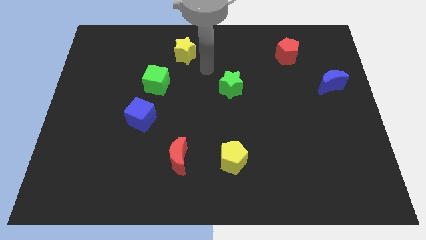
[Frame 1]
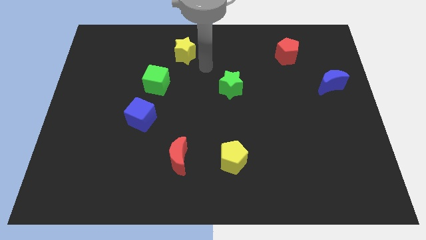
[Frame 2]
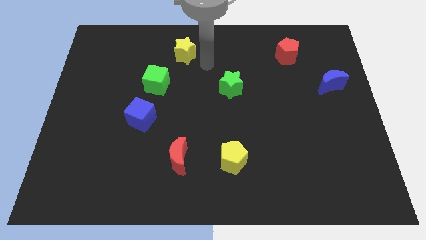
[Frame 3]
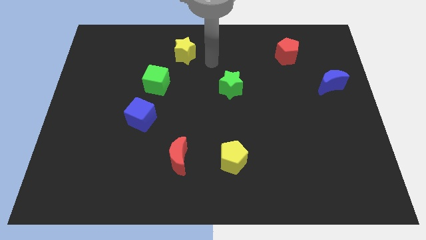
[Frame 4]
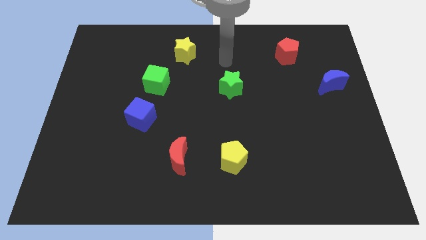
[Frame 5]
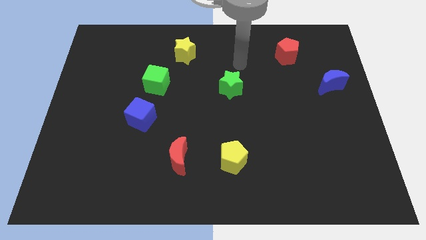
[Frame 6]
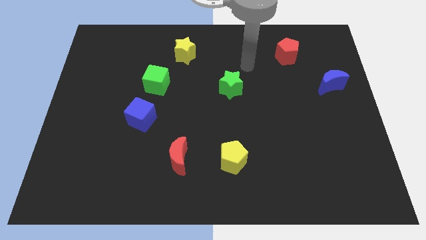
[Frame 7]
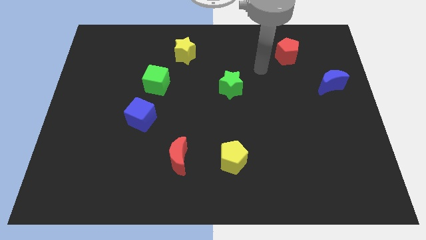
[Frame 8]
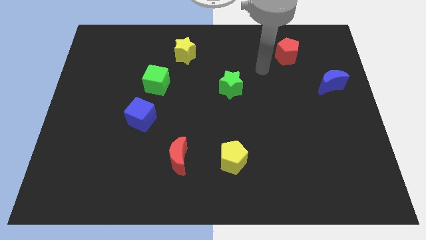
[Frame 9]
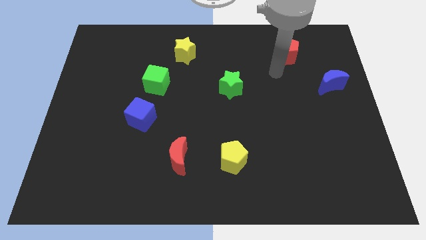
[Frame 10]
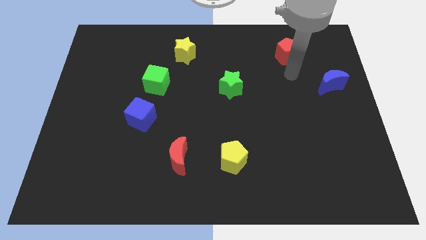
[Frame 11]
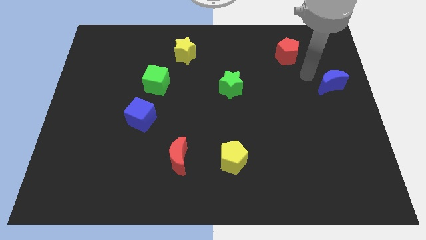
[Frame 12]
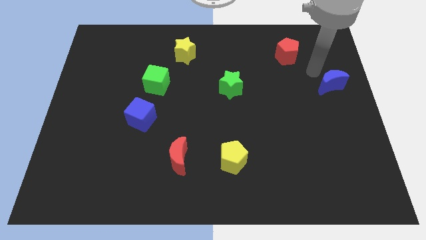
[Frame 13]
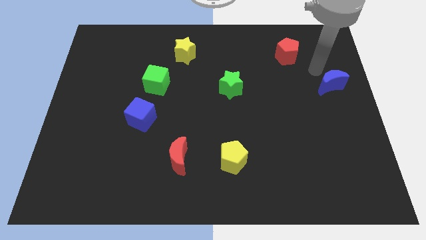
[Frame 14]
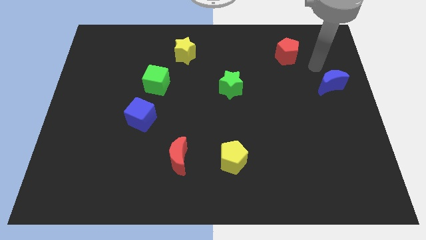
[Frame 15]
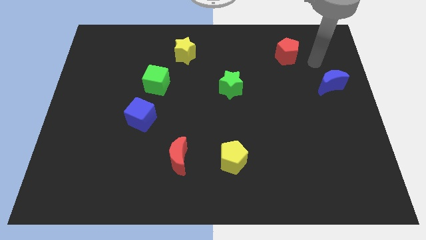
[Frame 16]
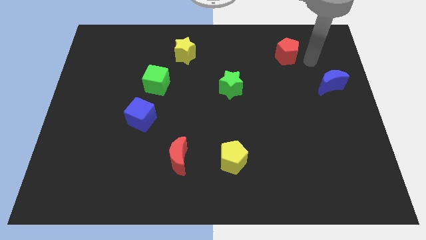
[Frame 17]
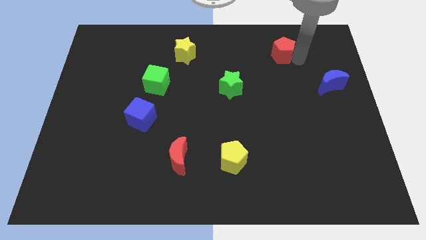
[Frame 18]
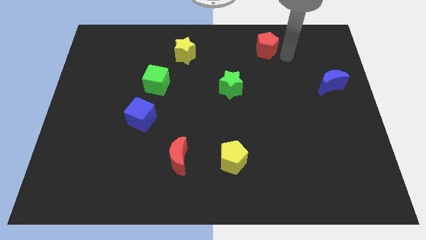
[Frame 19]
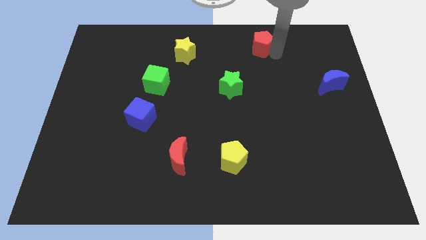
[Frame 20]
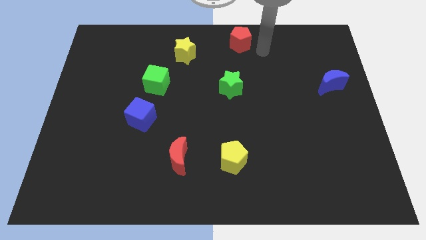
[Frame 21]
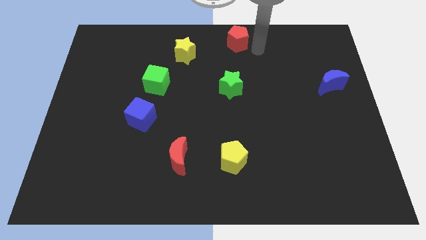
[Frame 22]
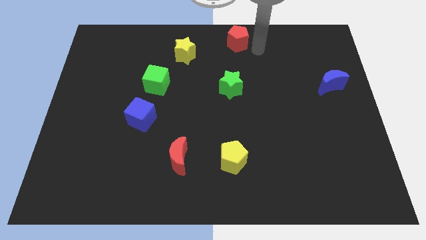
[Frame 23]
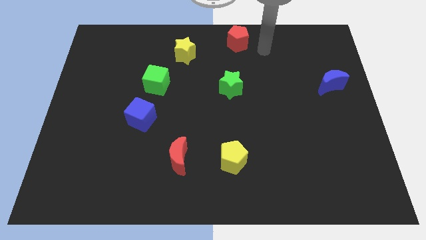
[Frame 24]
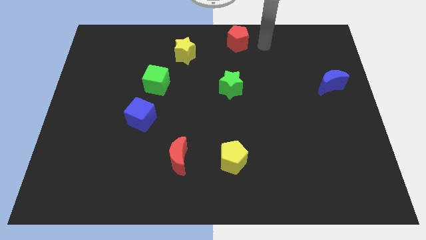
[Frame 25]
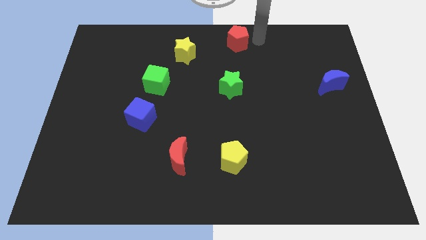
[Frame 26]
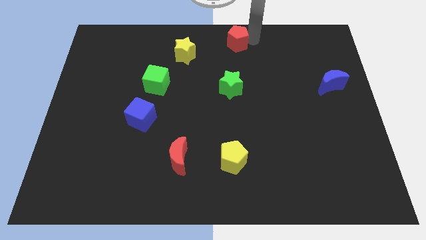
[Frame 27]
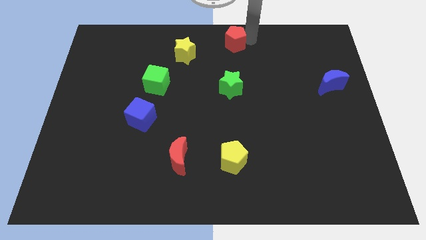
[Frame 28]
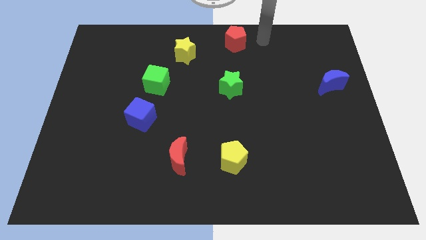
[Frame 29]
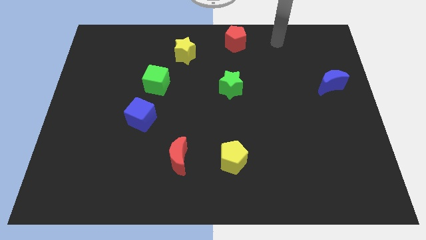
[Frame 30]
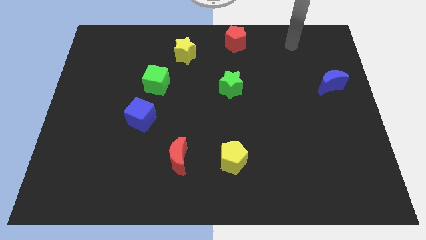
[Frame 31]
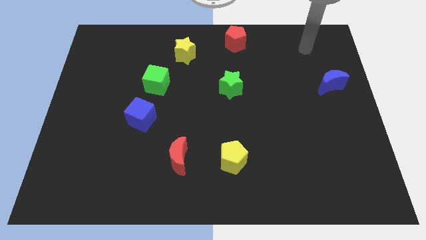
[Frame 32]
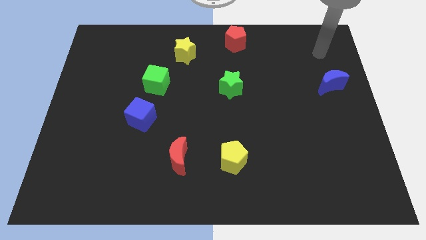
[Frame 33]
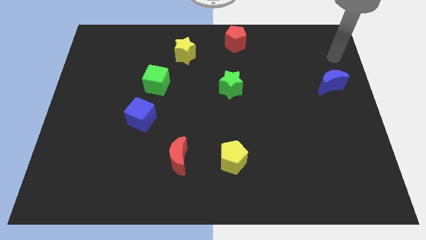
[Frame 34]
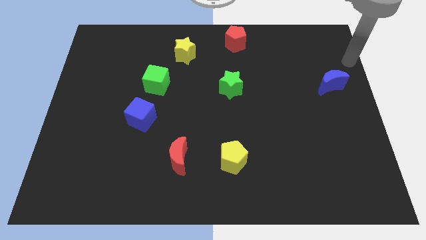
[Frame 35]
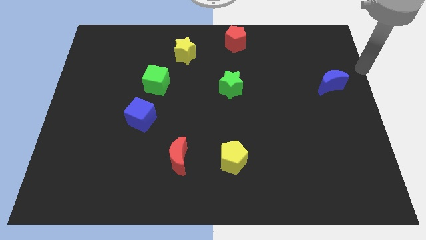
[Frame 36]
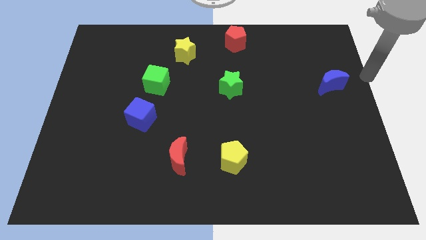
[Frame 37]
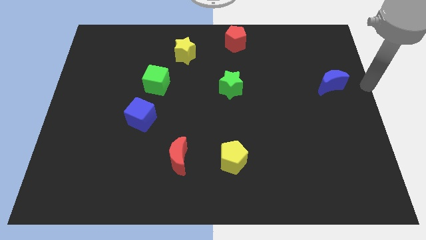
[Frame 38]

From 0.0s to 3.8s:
place the red pentagon on the top middle of the board

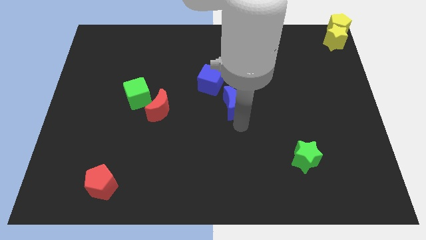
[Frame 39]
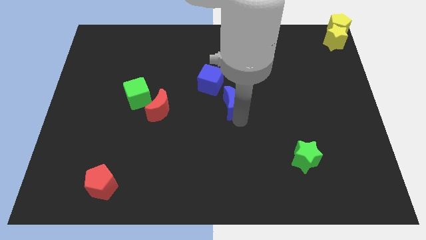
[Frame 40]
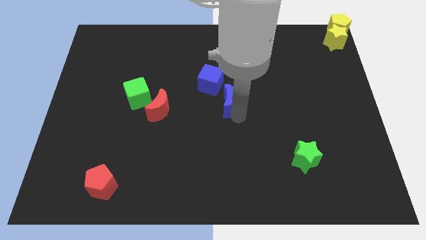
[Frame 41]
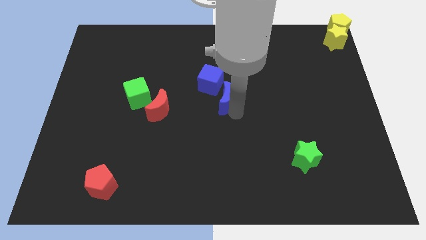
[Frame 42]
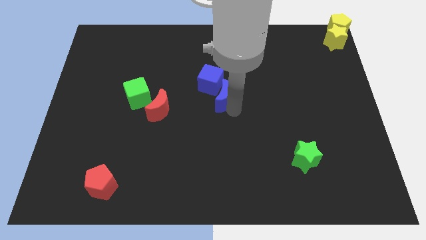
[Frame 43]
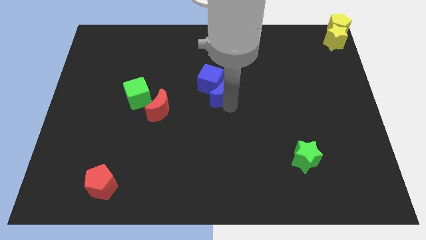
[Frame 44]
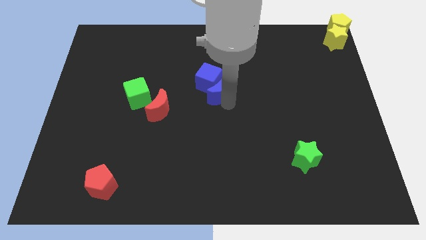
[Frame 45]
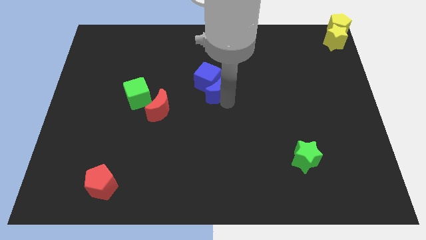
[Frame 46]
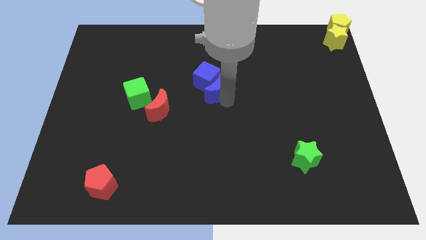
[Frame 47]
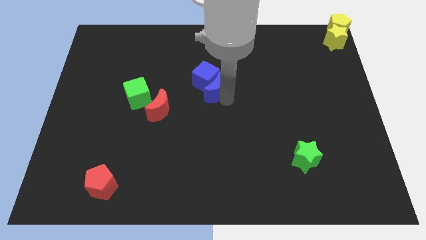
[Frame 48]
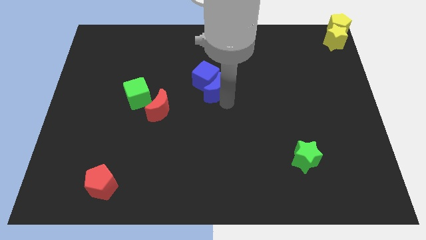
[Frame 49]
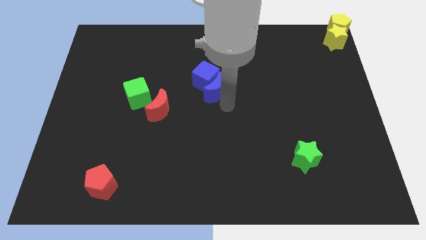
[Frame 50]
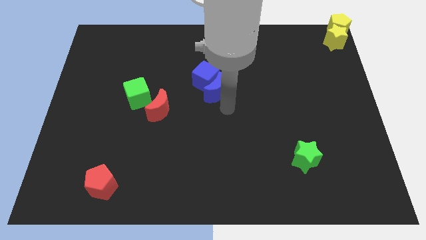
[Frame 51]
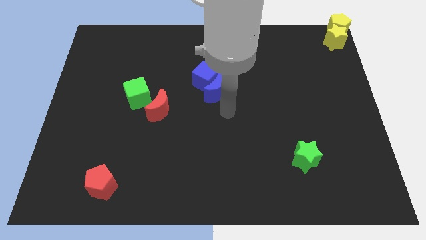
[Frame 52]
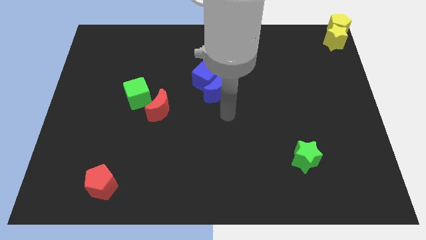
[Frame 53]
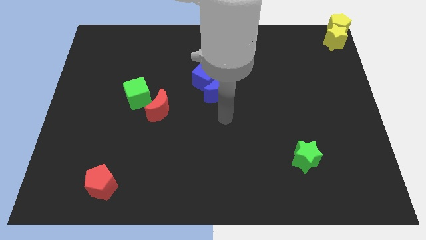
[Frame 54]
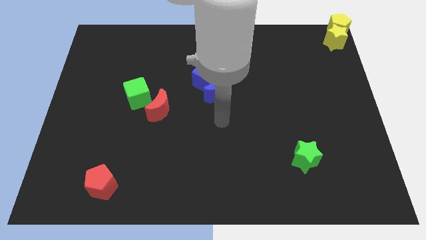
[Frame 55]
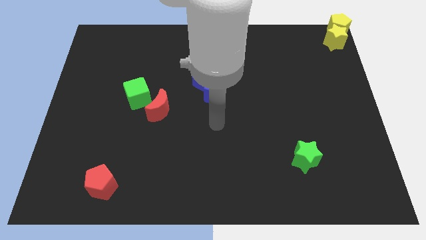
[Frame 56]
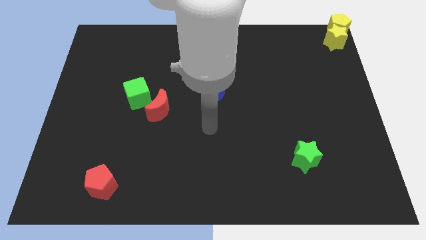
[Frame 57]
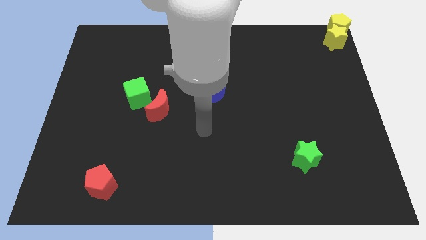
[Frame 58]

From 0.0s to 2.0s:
push the blue crescent into the blue cube

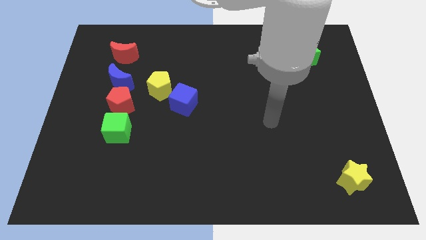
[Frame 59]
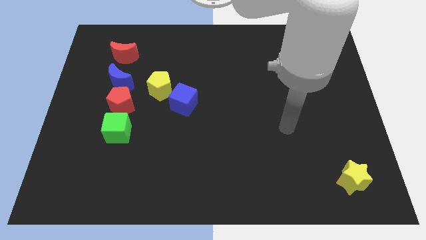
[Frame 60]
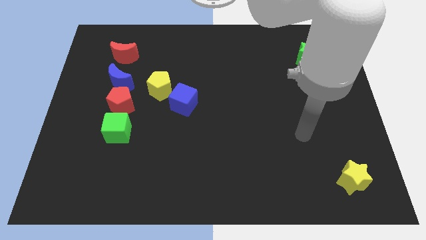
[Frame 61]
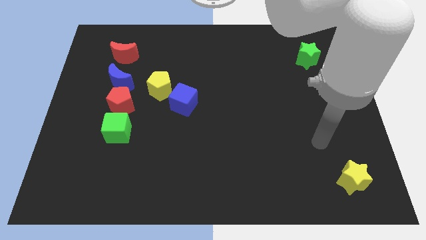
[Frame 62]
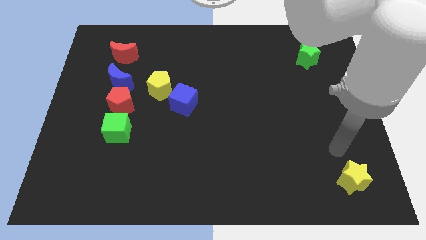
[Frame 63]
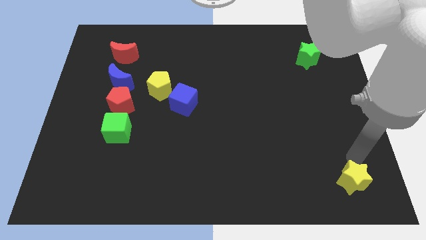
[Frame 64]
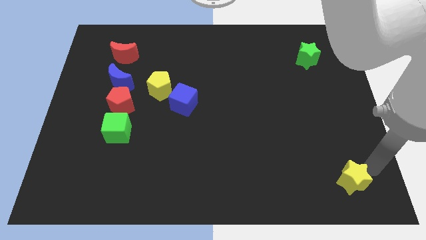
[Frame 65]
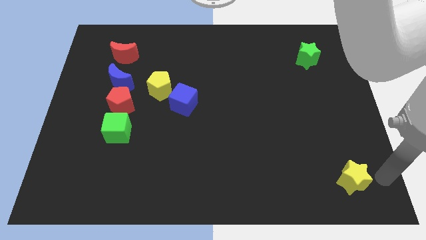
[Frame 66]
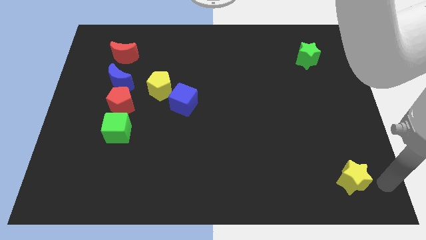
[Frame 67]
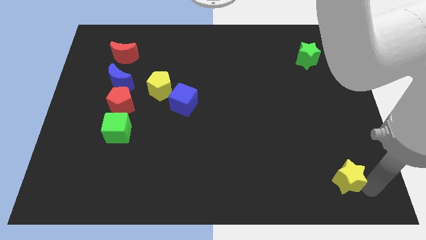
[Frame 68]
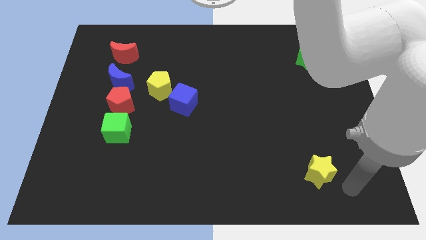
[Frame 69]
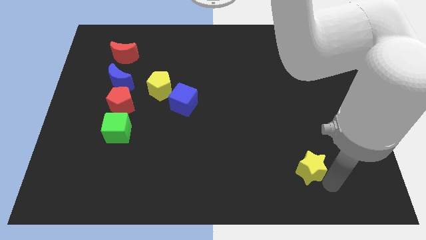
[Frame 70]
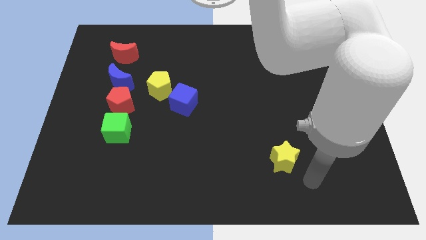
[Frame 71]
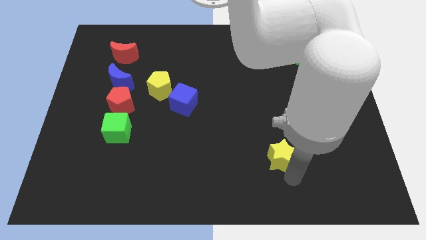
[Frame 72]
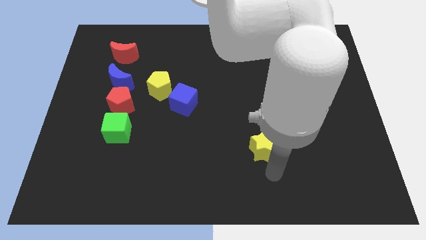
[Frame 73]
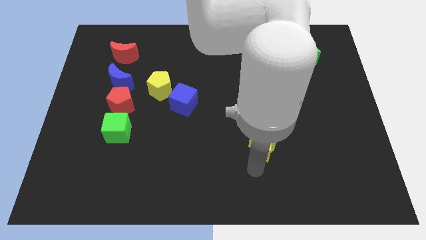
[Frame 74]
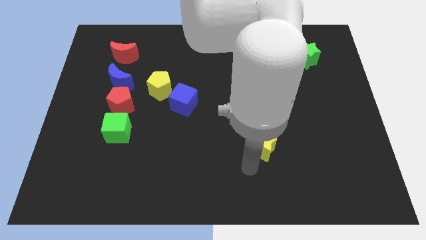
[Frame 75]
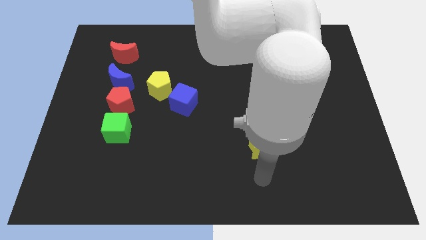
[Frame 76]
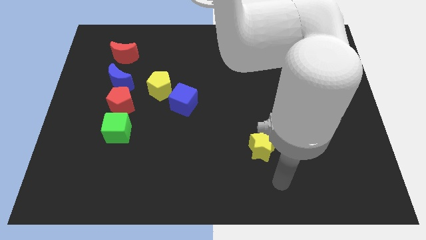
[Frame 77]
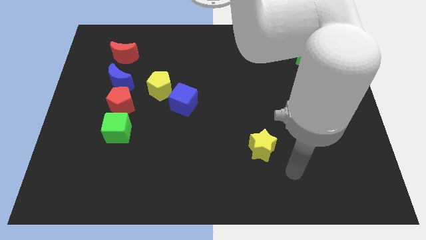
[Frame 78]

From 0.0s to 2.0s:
move the yellow star towards the blue cube

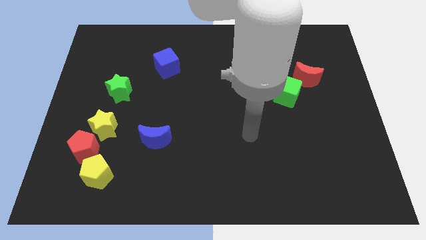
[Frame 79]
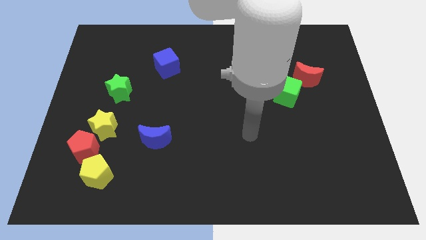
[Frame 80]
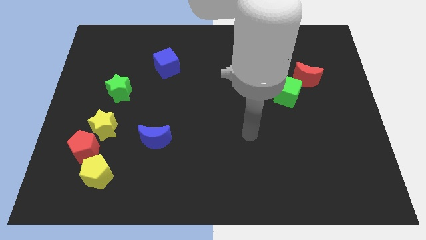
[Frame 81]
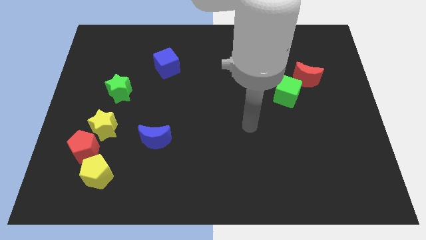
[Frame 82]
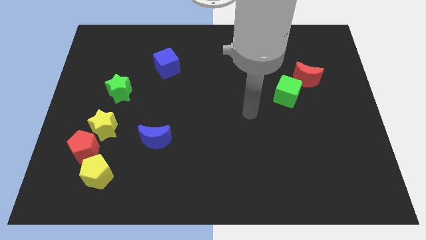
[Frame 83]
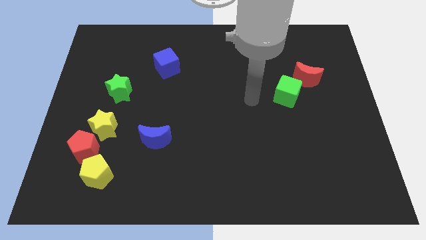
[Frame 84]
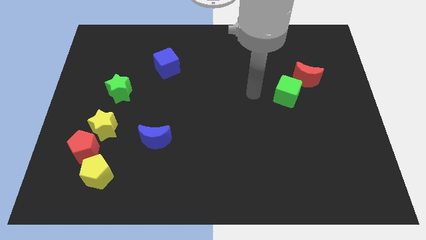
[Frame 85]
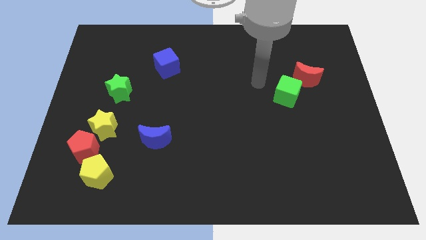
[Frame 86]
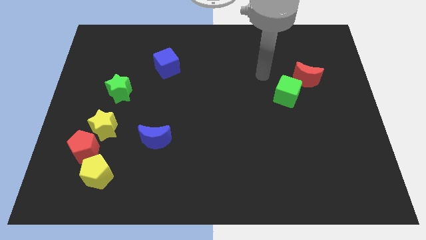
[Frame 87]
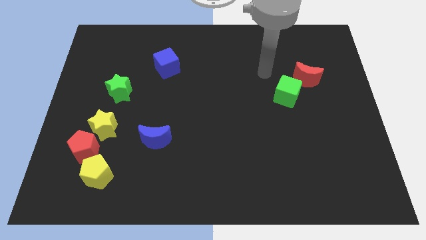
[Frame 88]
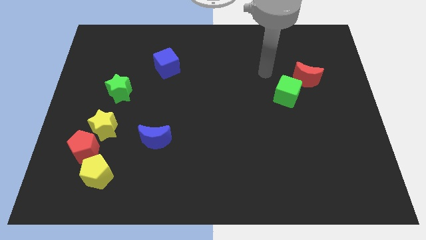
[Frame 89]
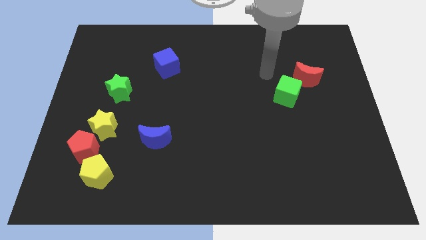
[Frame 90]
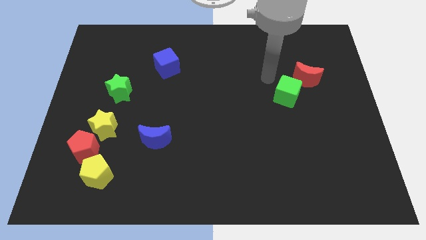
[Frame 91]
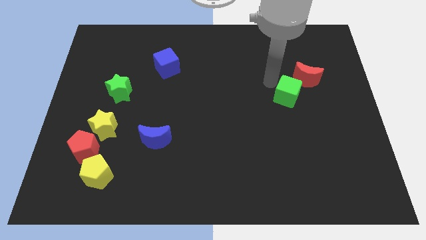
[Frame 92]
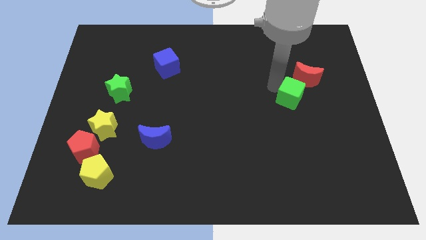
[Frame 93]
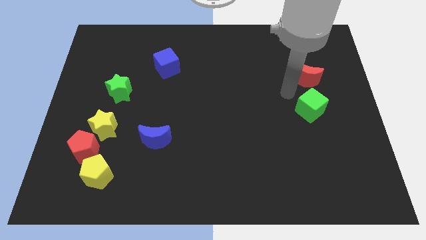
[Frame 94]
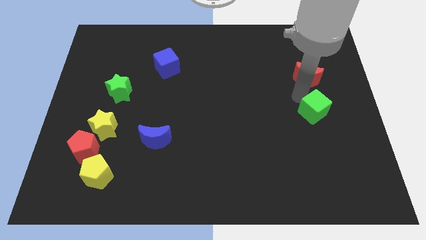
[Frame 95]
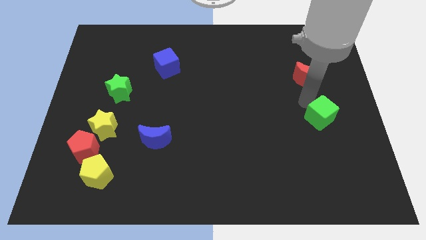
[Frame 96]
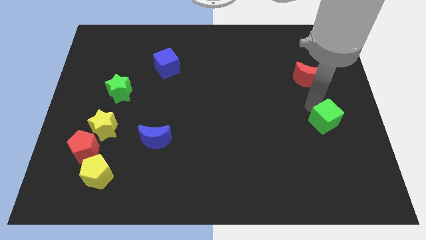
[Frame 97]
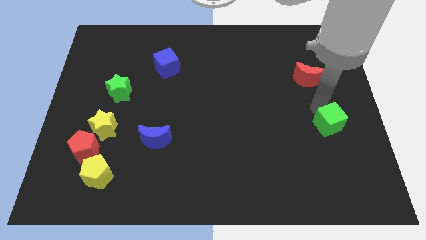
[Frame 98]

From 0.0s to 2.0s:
push the green cube to the right side of the board
